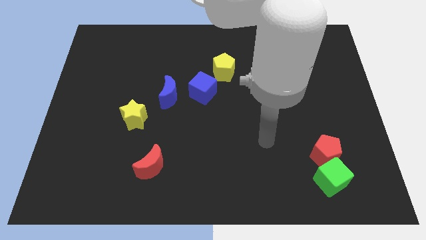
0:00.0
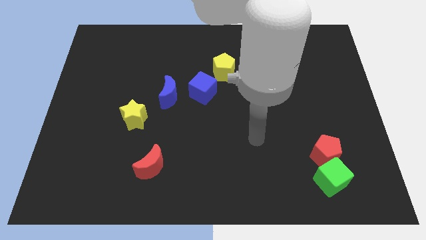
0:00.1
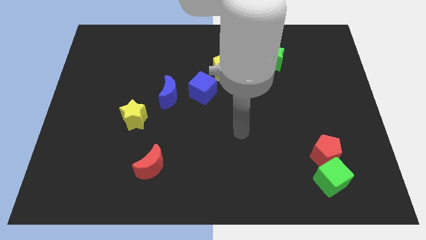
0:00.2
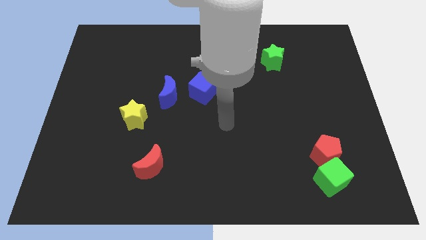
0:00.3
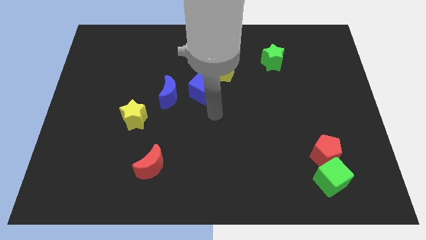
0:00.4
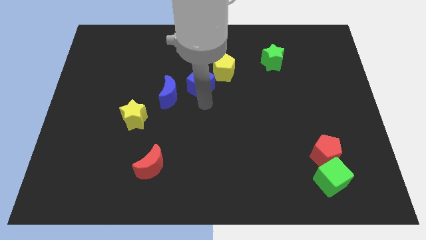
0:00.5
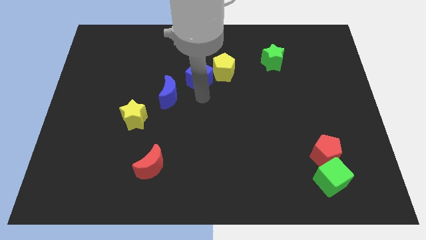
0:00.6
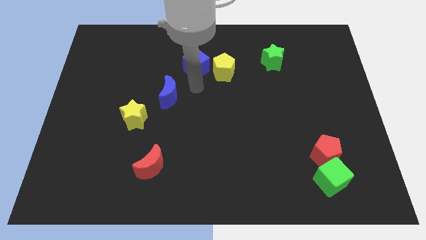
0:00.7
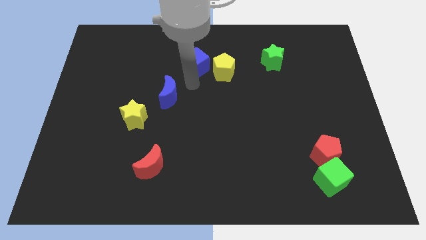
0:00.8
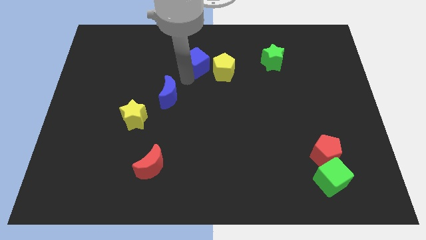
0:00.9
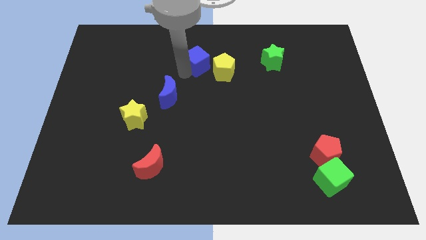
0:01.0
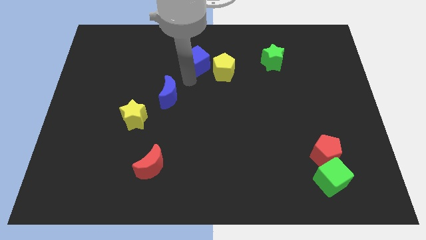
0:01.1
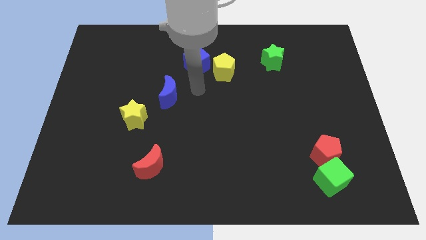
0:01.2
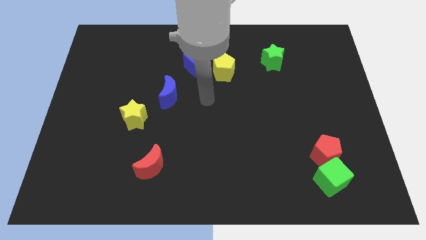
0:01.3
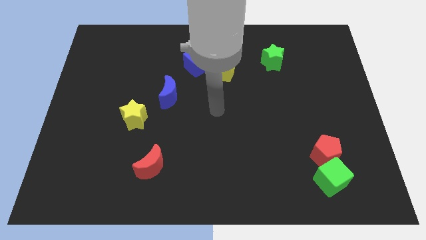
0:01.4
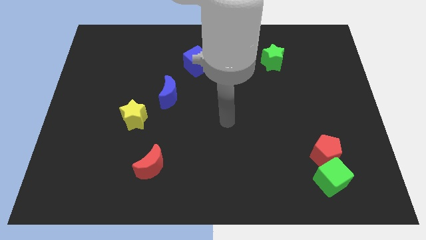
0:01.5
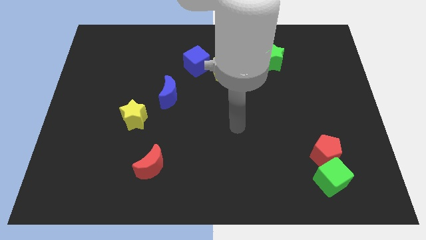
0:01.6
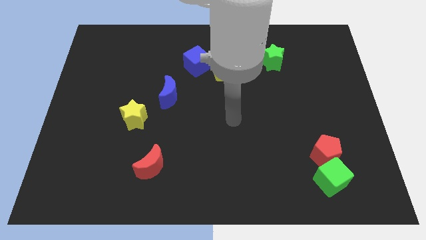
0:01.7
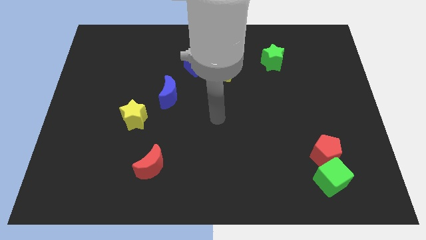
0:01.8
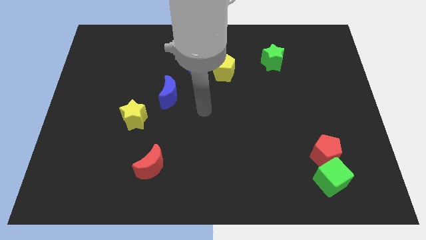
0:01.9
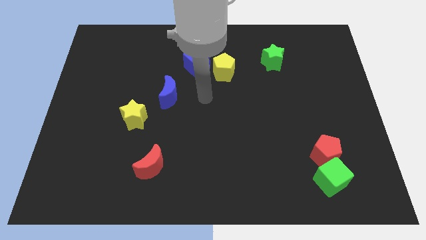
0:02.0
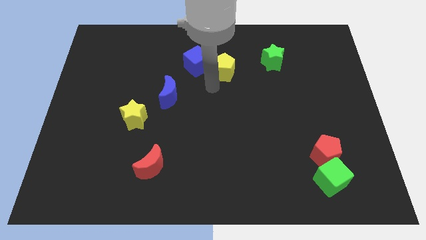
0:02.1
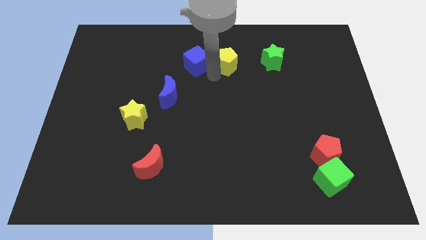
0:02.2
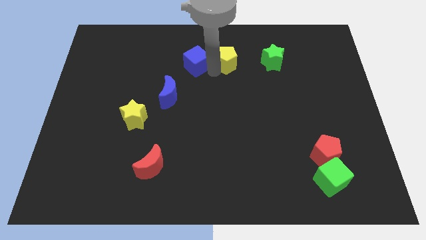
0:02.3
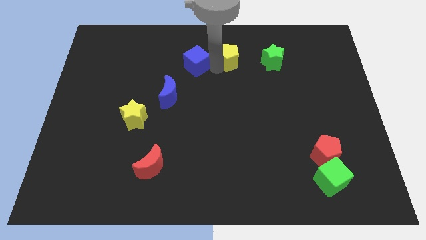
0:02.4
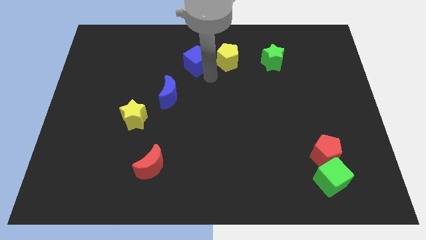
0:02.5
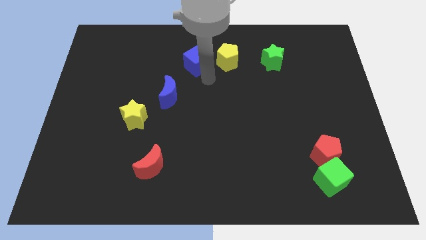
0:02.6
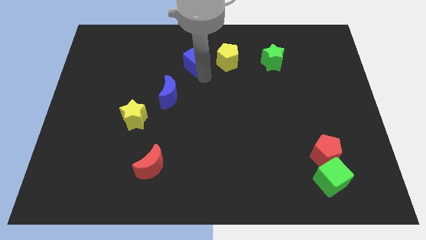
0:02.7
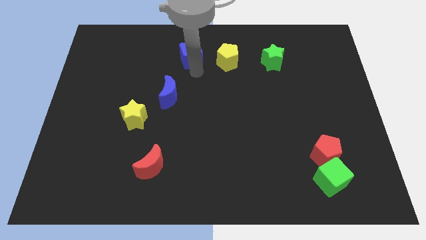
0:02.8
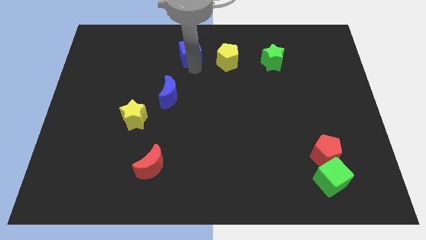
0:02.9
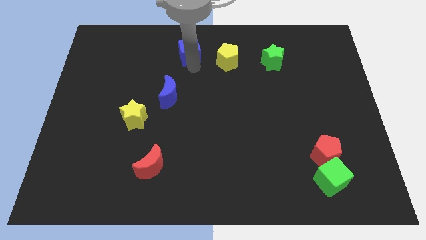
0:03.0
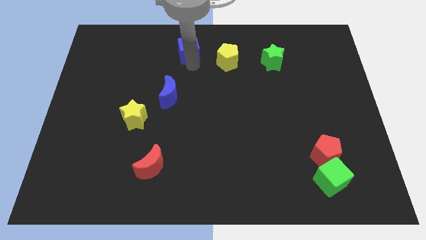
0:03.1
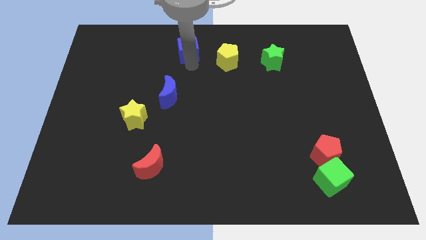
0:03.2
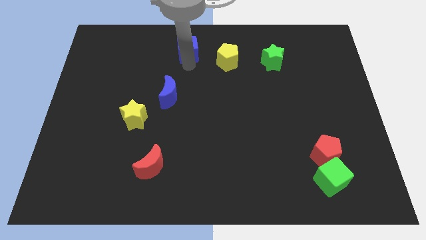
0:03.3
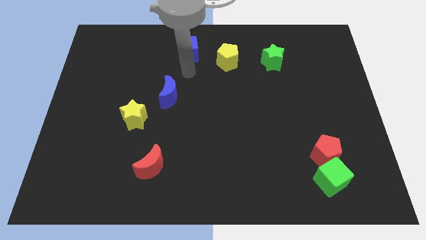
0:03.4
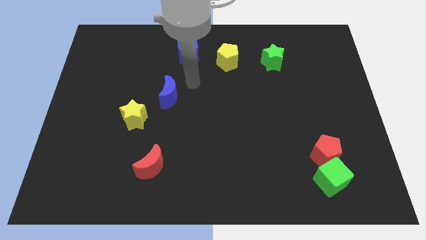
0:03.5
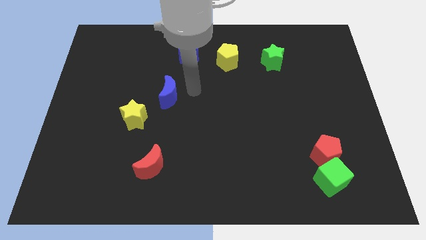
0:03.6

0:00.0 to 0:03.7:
move blue cube yellow pentagon slightly towards up

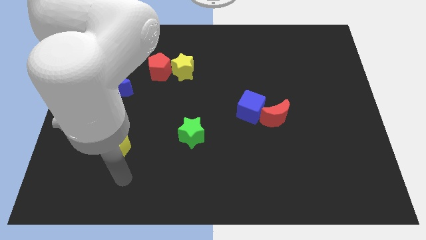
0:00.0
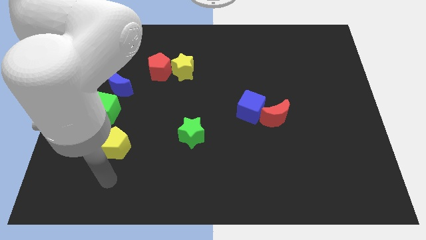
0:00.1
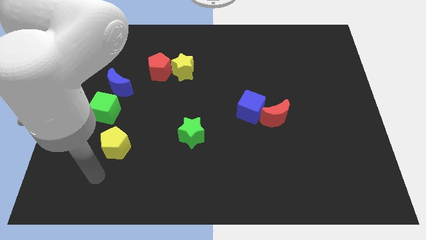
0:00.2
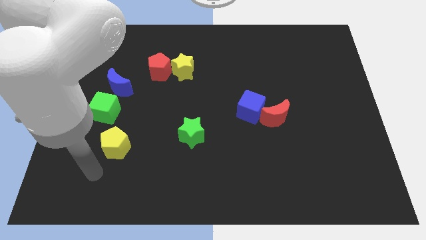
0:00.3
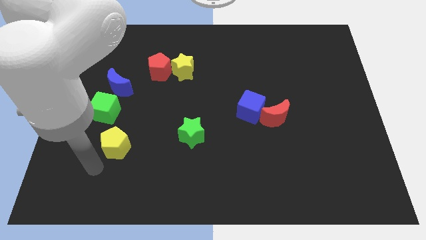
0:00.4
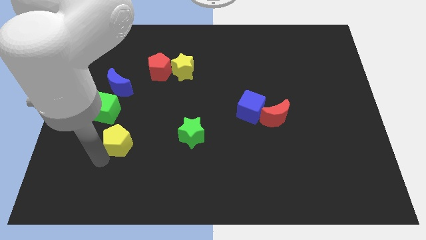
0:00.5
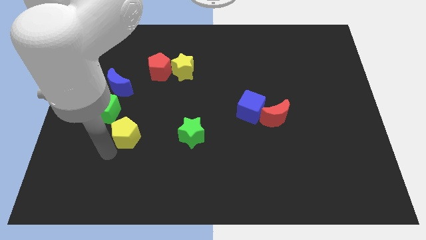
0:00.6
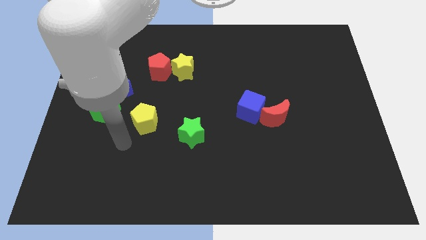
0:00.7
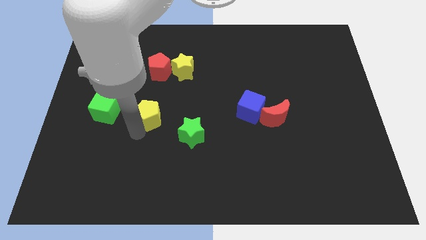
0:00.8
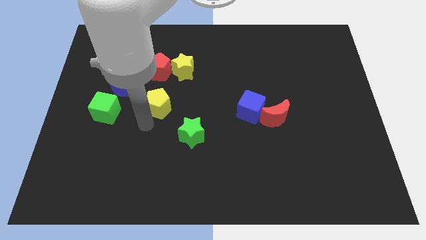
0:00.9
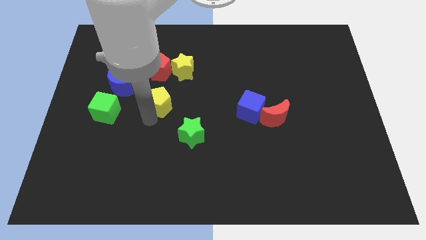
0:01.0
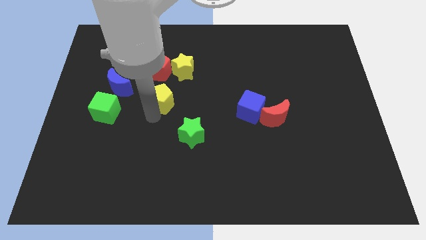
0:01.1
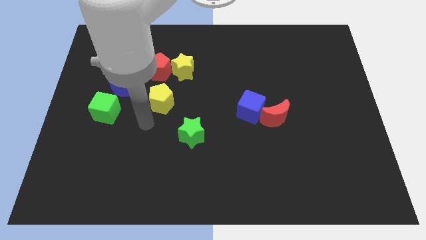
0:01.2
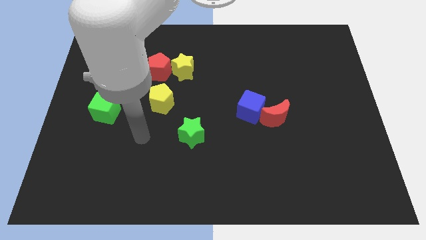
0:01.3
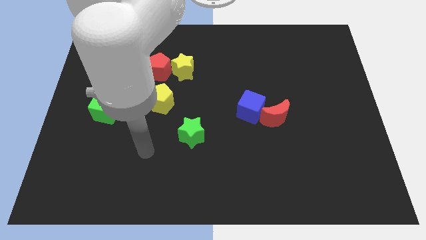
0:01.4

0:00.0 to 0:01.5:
put the yellow pentagon below the red pentagon

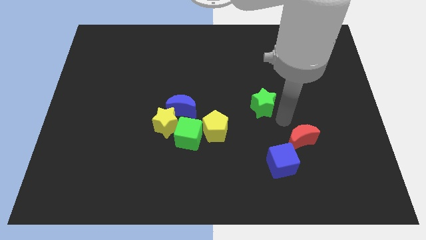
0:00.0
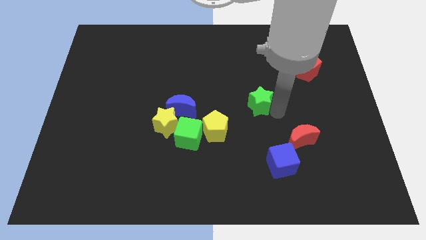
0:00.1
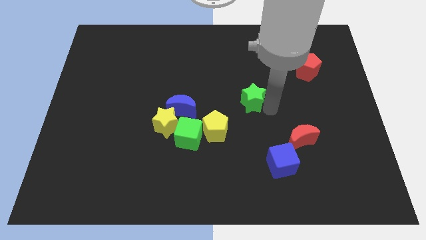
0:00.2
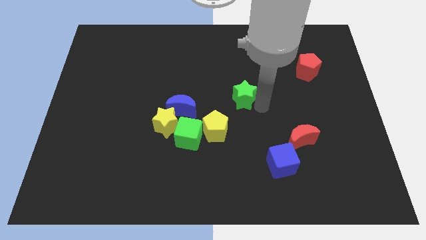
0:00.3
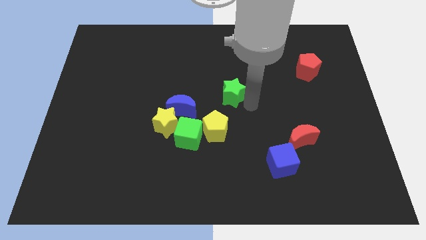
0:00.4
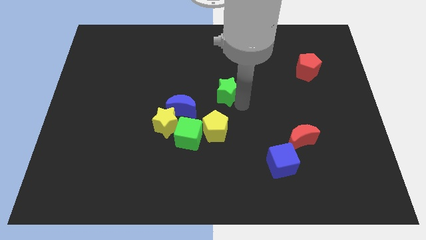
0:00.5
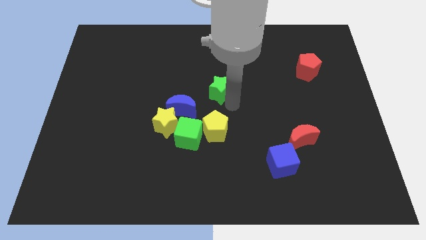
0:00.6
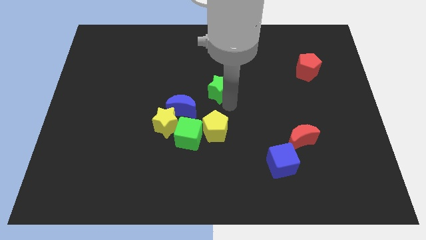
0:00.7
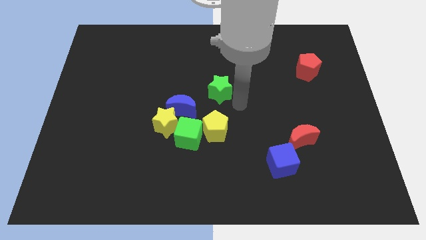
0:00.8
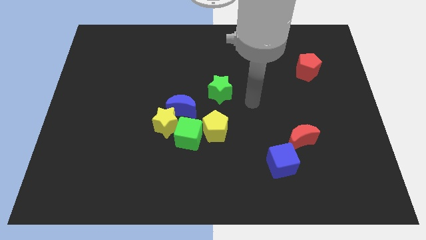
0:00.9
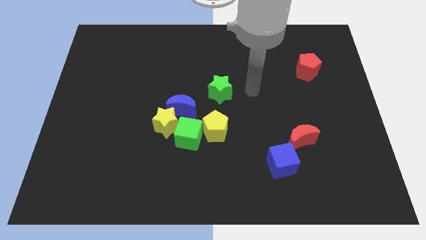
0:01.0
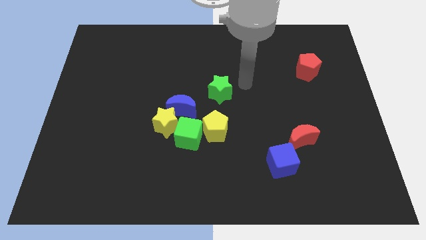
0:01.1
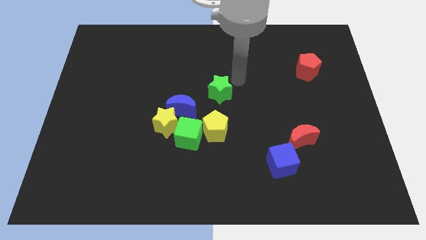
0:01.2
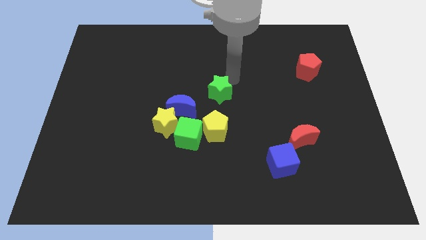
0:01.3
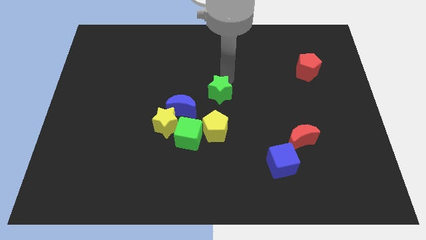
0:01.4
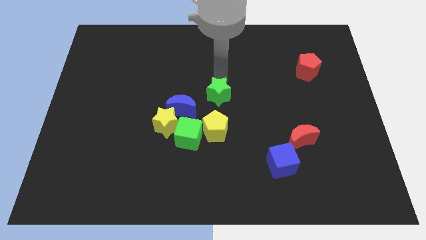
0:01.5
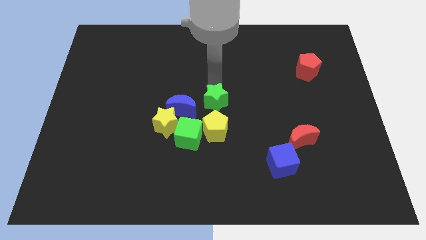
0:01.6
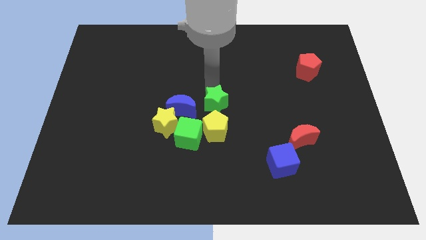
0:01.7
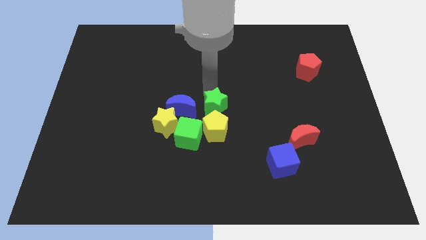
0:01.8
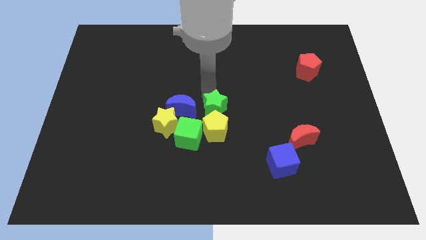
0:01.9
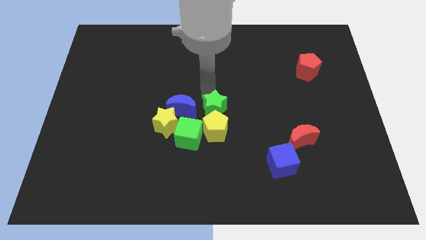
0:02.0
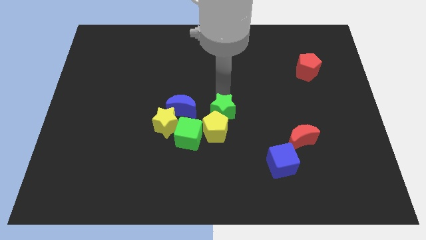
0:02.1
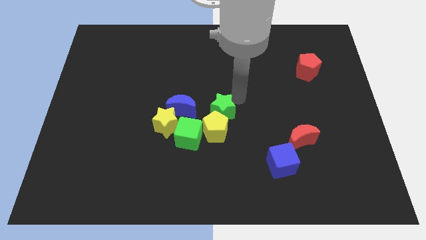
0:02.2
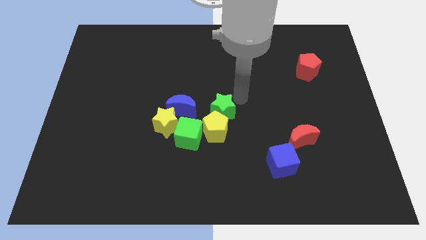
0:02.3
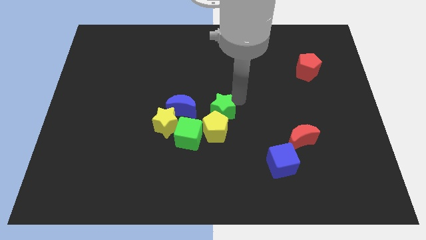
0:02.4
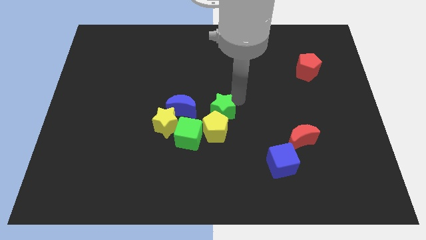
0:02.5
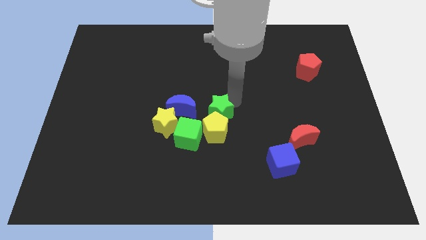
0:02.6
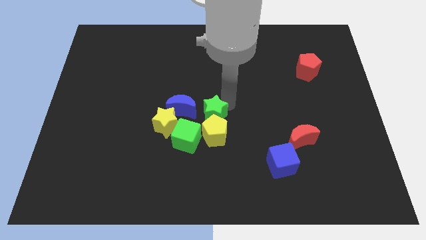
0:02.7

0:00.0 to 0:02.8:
place the green star at the top of the yellow pentagon

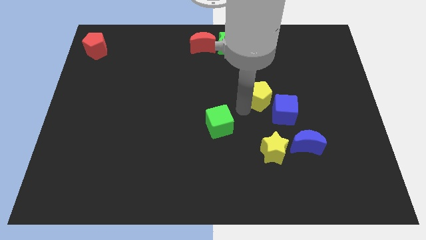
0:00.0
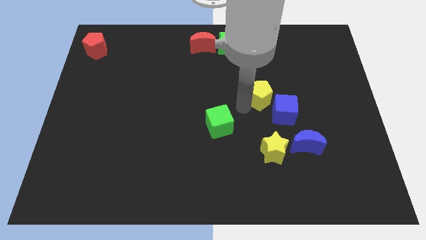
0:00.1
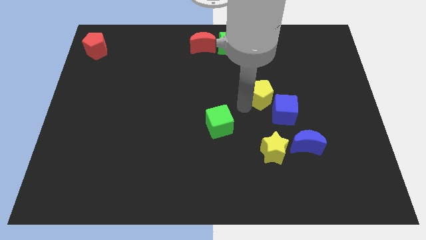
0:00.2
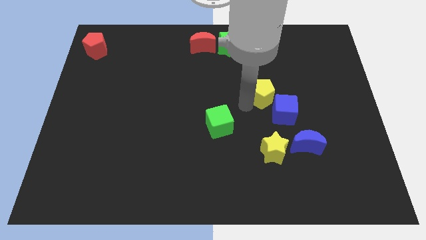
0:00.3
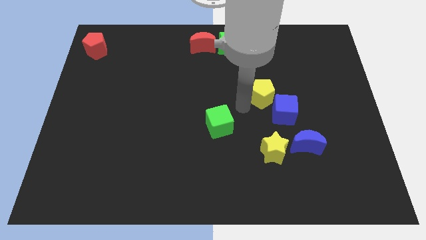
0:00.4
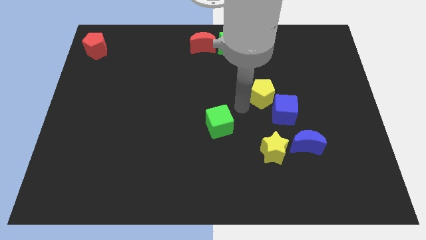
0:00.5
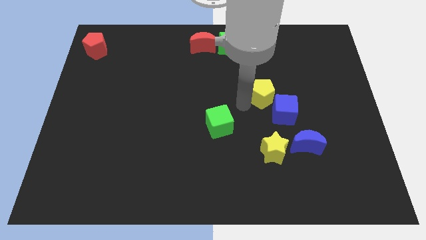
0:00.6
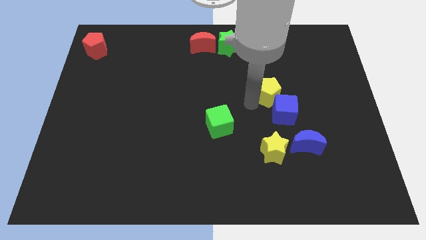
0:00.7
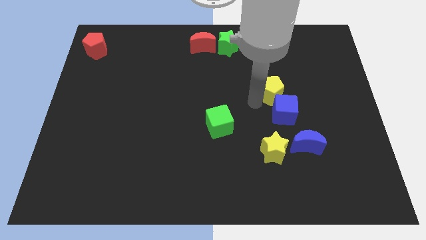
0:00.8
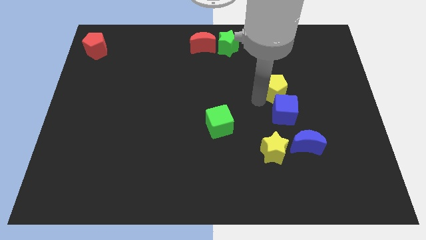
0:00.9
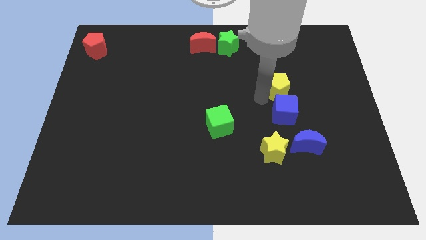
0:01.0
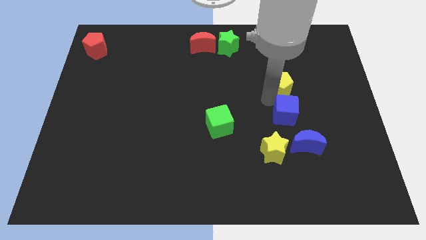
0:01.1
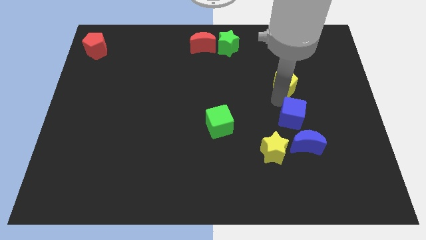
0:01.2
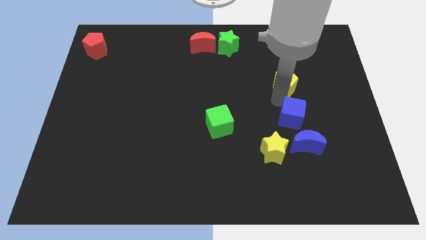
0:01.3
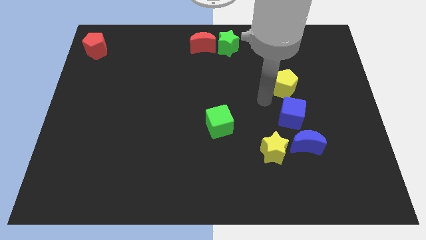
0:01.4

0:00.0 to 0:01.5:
push the yellow pentagon to the top of the blue cube
